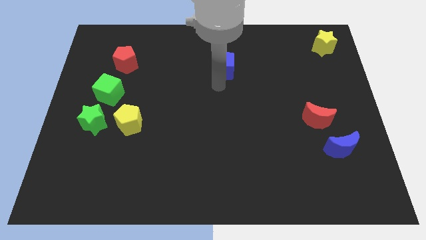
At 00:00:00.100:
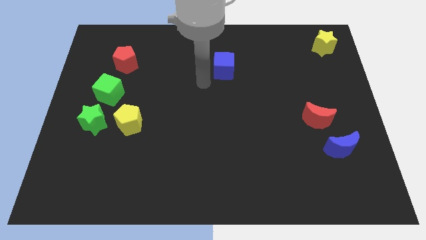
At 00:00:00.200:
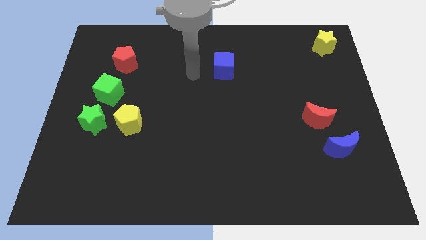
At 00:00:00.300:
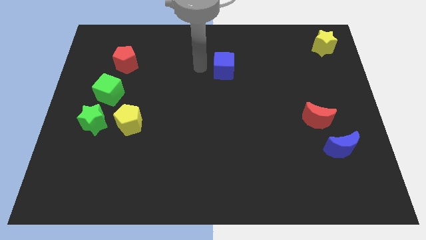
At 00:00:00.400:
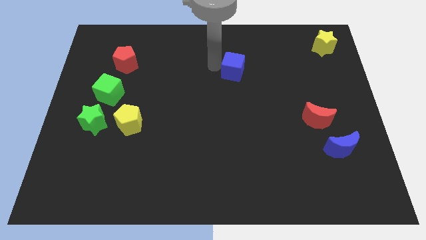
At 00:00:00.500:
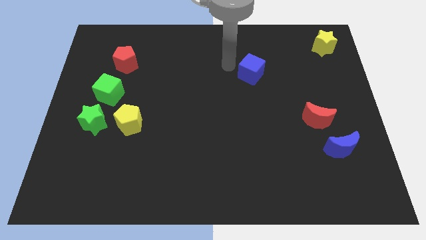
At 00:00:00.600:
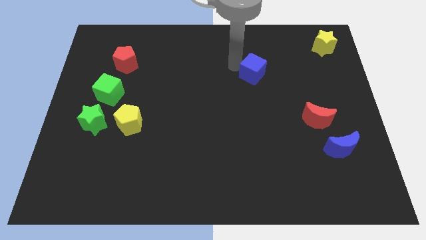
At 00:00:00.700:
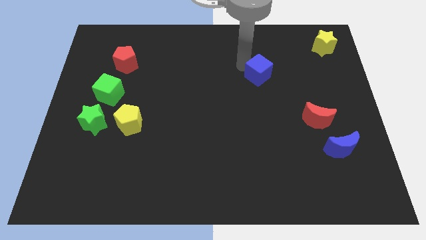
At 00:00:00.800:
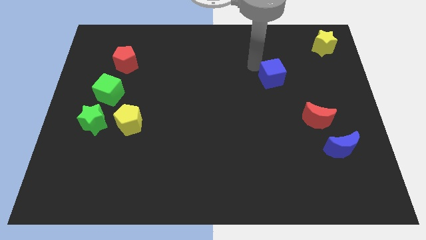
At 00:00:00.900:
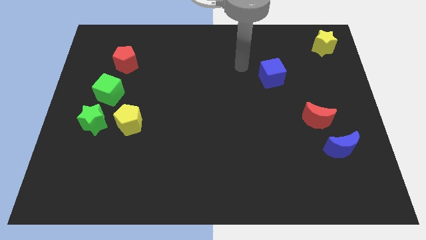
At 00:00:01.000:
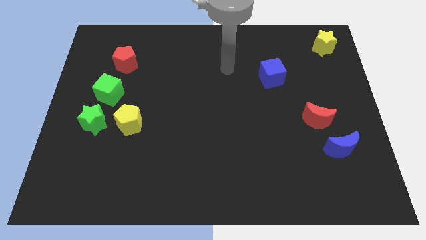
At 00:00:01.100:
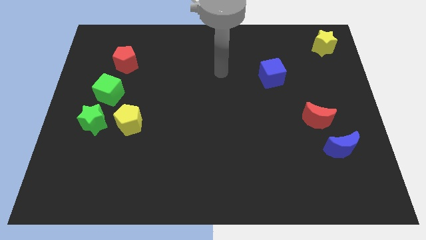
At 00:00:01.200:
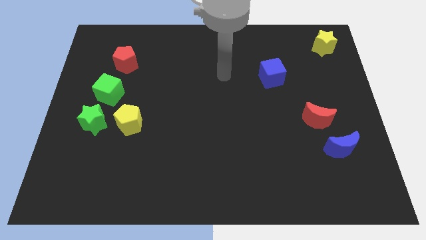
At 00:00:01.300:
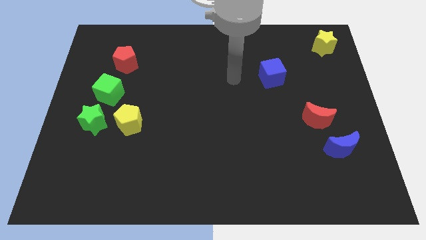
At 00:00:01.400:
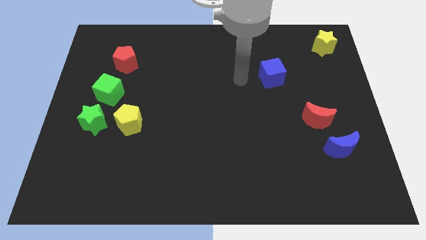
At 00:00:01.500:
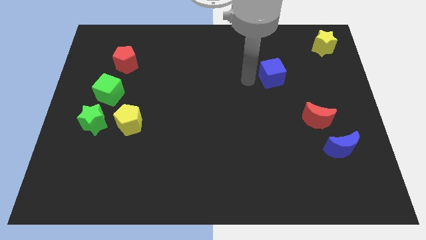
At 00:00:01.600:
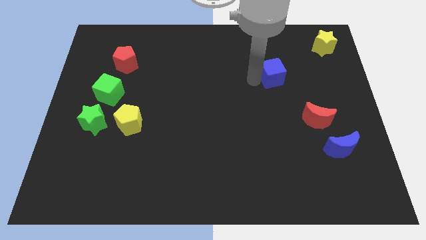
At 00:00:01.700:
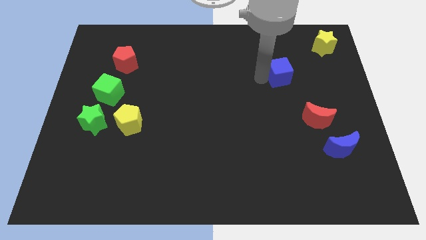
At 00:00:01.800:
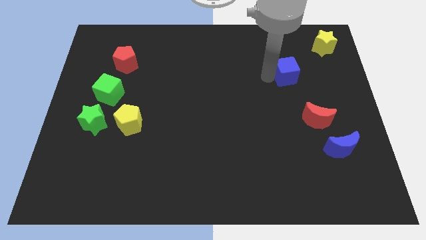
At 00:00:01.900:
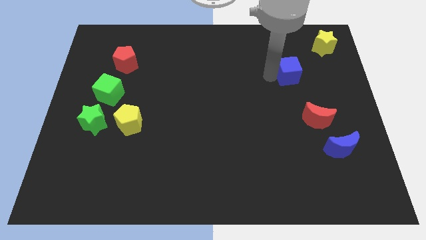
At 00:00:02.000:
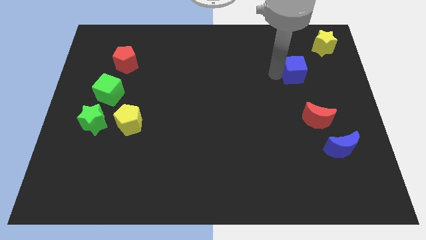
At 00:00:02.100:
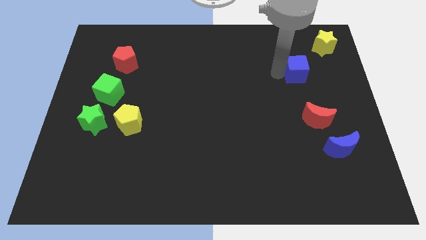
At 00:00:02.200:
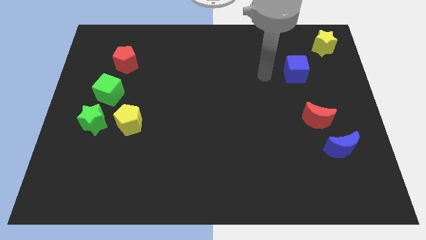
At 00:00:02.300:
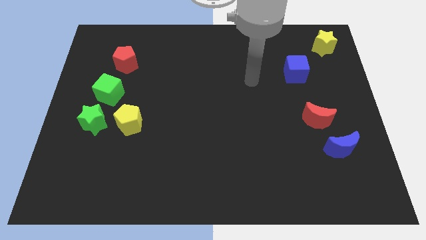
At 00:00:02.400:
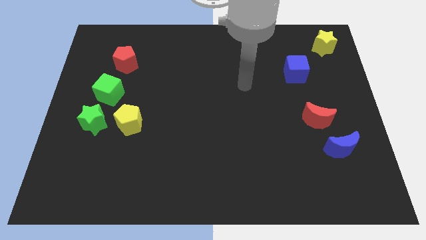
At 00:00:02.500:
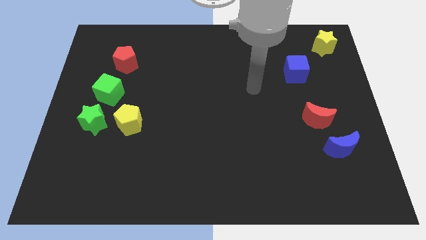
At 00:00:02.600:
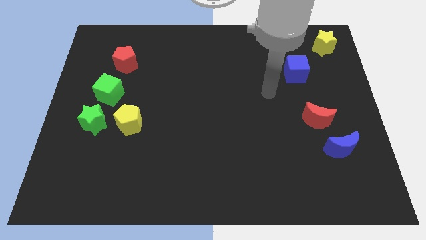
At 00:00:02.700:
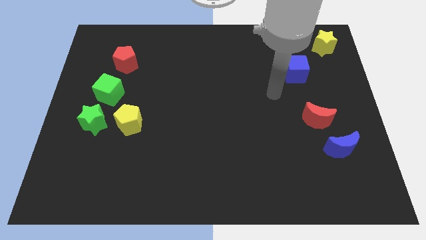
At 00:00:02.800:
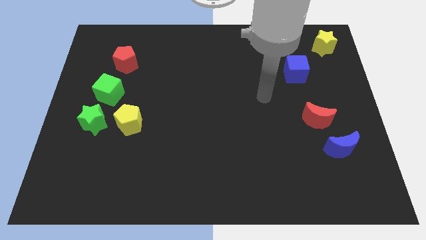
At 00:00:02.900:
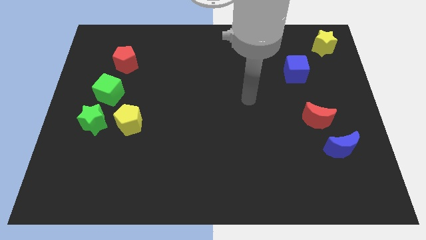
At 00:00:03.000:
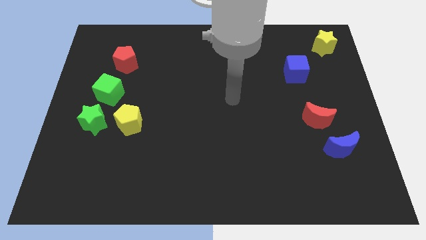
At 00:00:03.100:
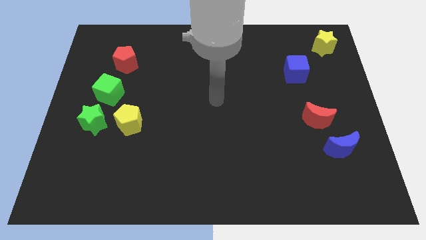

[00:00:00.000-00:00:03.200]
place the blue cube at the bottom left side of yellow star

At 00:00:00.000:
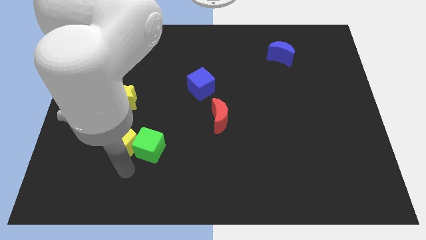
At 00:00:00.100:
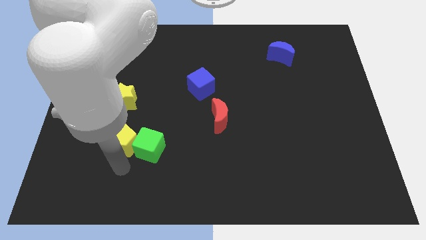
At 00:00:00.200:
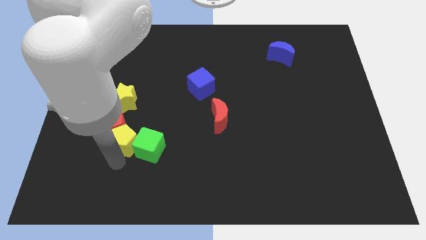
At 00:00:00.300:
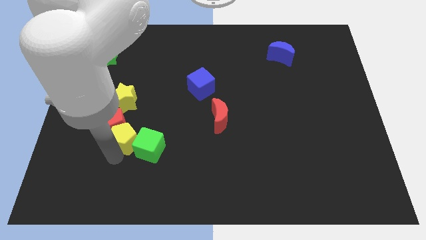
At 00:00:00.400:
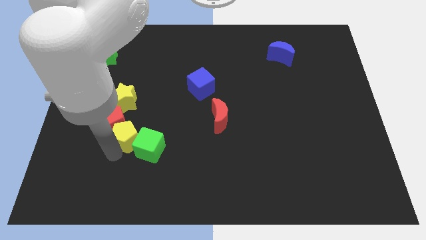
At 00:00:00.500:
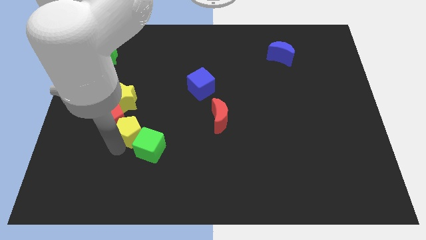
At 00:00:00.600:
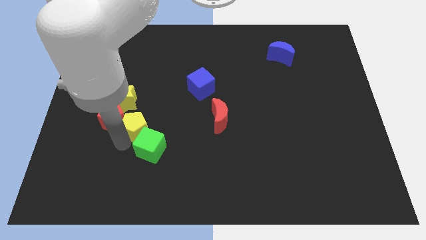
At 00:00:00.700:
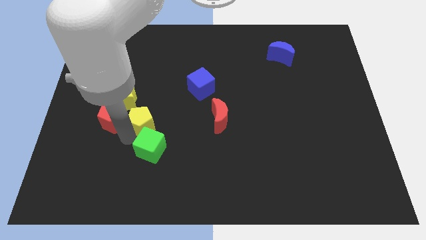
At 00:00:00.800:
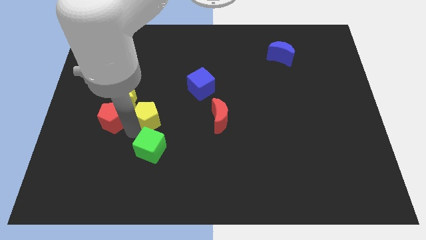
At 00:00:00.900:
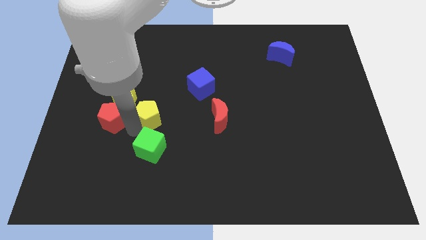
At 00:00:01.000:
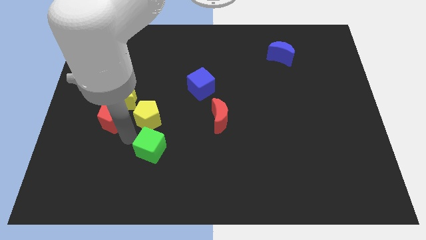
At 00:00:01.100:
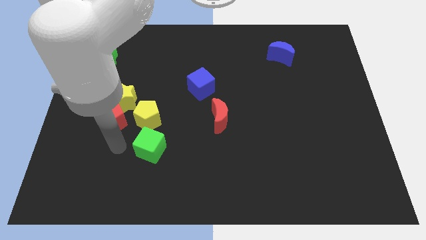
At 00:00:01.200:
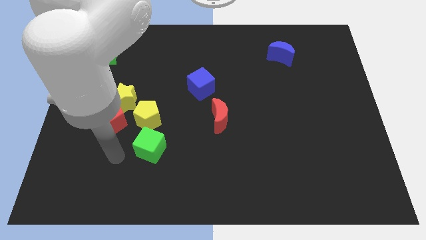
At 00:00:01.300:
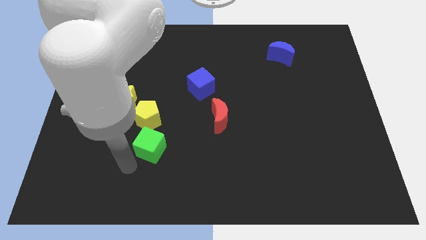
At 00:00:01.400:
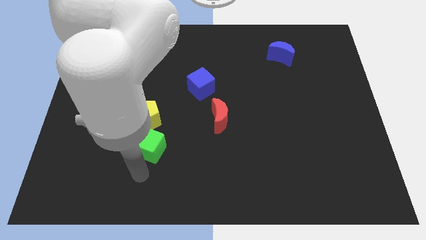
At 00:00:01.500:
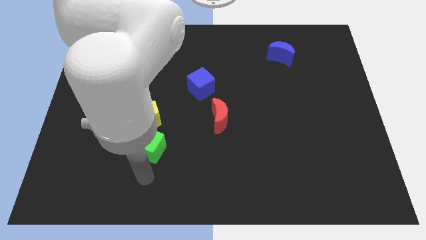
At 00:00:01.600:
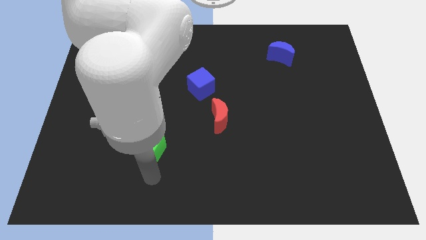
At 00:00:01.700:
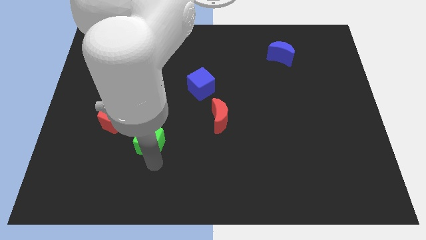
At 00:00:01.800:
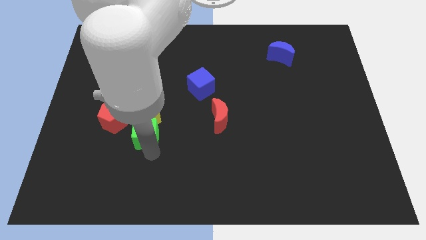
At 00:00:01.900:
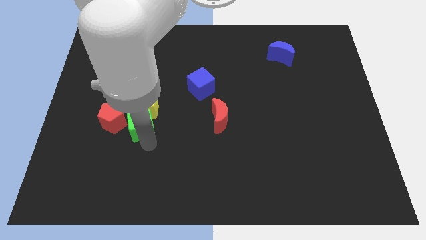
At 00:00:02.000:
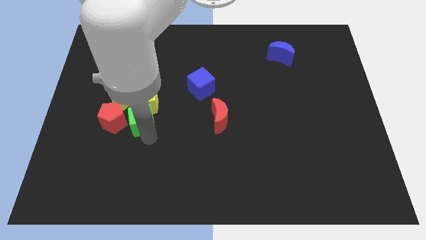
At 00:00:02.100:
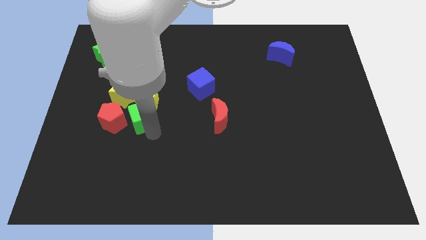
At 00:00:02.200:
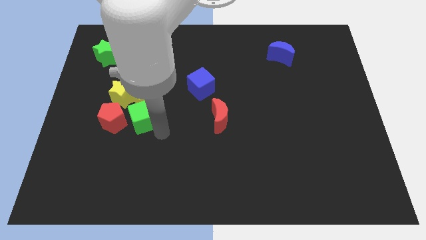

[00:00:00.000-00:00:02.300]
move yellow pentagon beside green star

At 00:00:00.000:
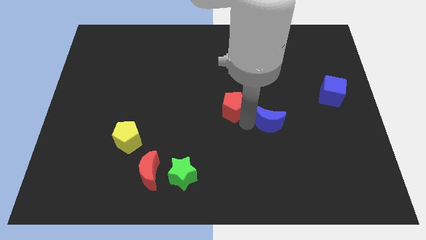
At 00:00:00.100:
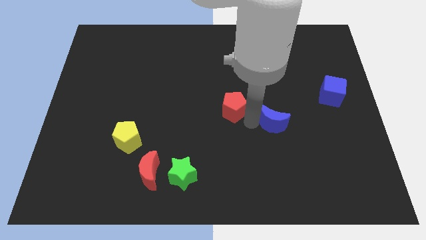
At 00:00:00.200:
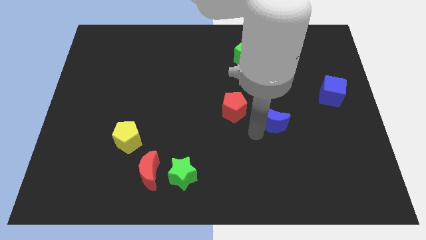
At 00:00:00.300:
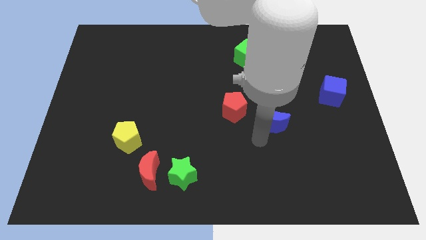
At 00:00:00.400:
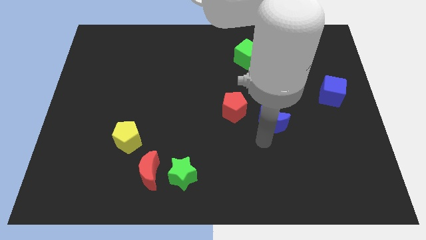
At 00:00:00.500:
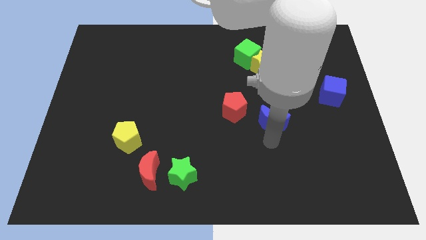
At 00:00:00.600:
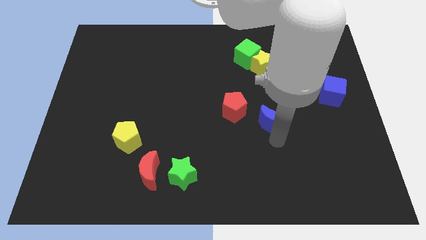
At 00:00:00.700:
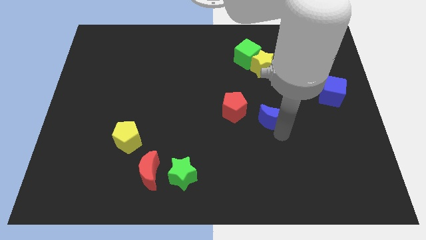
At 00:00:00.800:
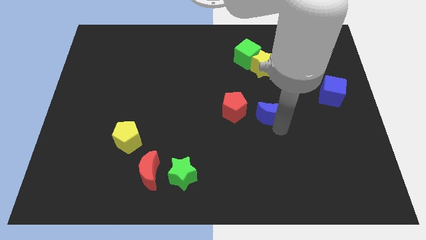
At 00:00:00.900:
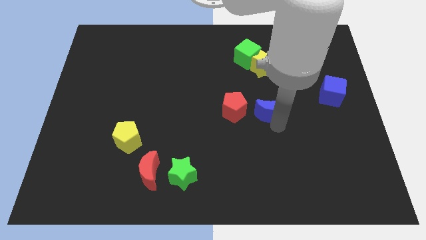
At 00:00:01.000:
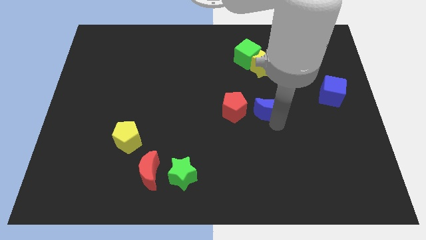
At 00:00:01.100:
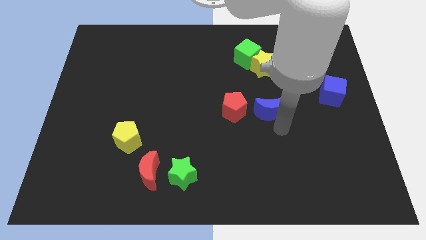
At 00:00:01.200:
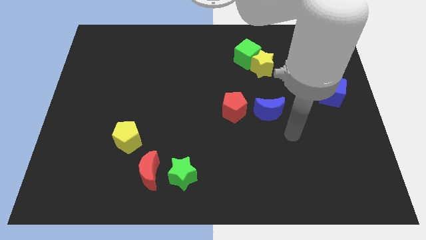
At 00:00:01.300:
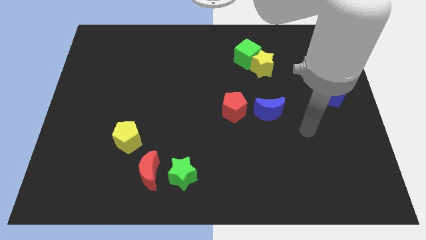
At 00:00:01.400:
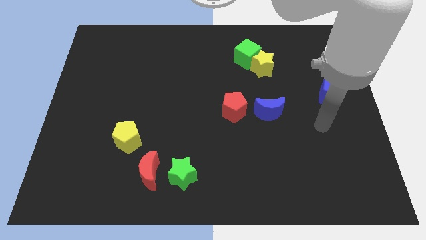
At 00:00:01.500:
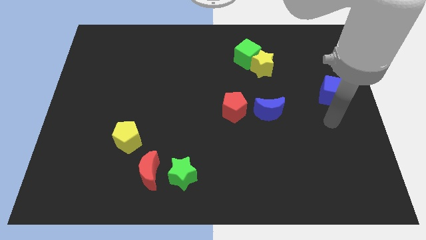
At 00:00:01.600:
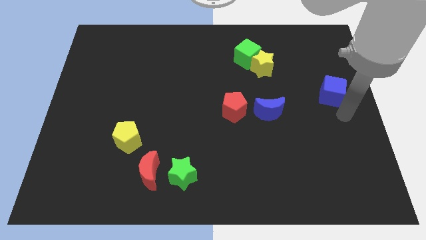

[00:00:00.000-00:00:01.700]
place the blue moon to the right of the red pentagon

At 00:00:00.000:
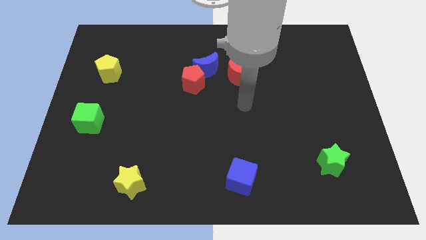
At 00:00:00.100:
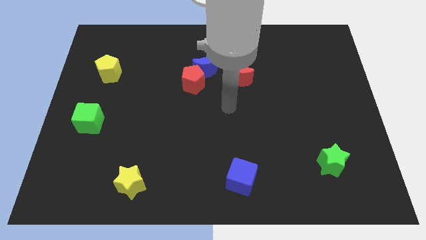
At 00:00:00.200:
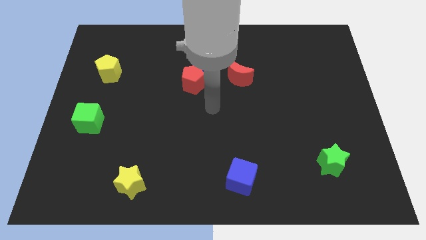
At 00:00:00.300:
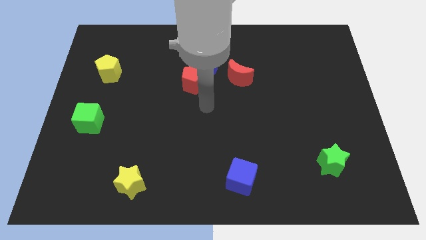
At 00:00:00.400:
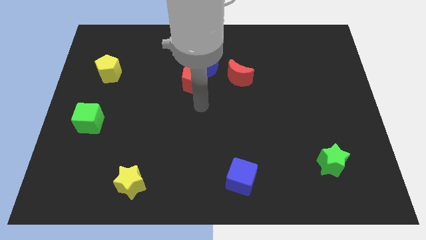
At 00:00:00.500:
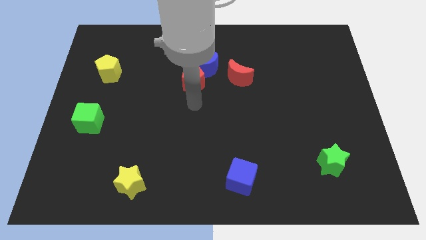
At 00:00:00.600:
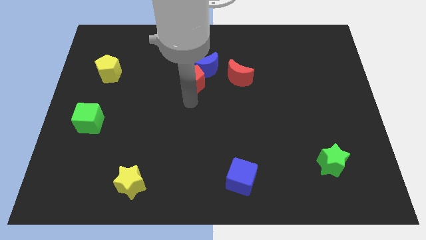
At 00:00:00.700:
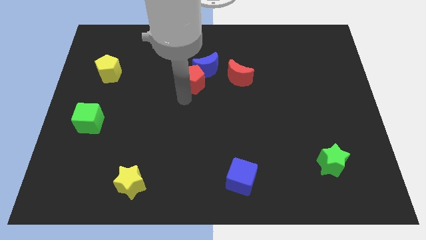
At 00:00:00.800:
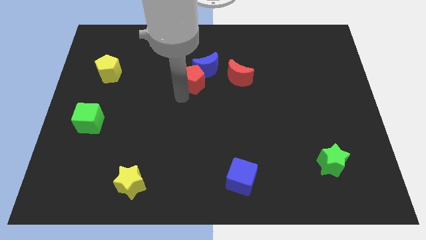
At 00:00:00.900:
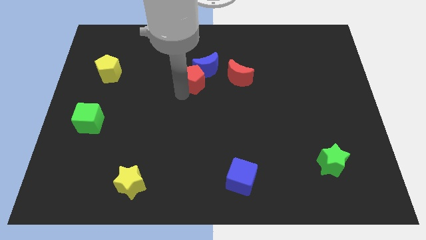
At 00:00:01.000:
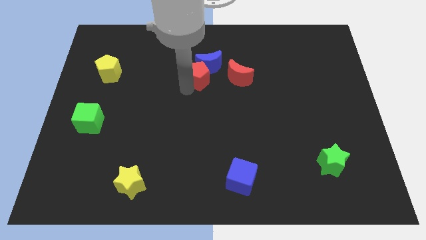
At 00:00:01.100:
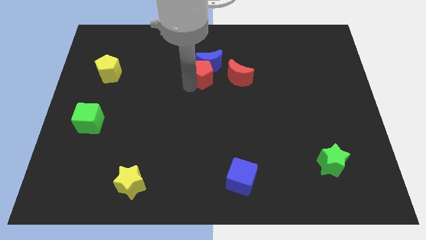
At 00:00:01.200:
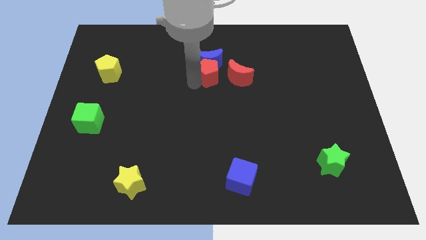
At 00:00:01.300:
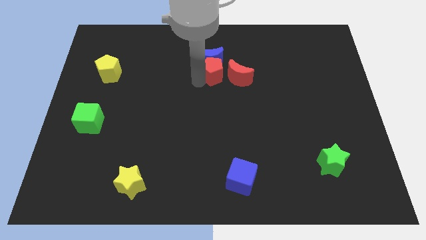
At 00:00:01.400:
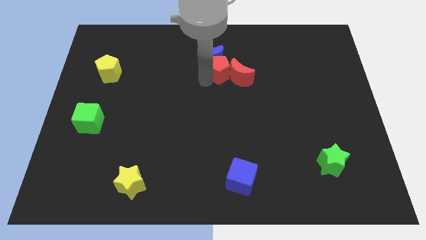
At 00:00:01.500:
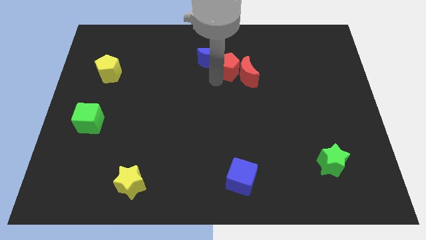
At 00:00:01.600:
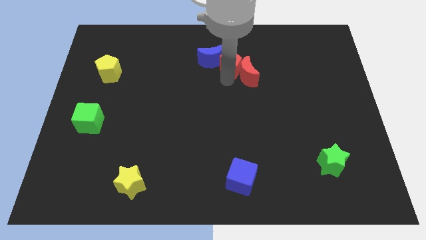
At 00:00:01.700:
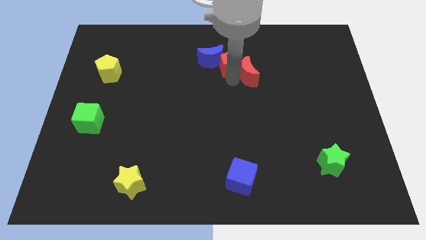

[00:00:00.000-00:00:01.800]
push the red pentagon in between the blue and red crescent diagonally
